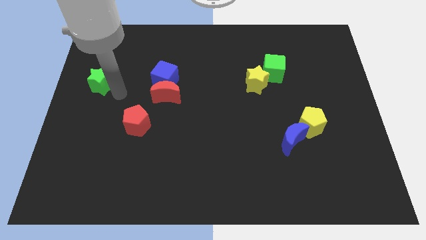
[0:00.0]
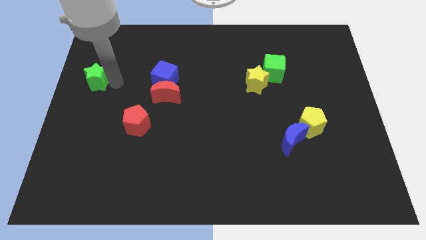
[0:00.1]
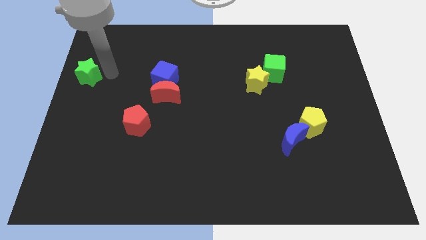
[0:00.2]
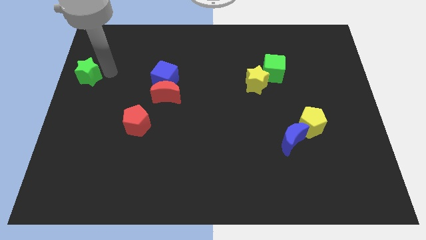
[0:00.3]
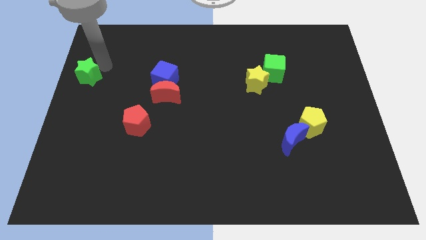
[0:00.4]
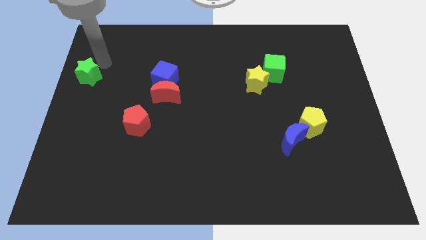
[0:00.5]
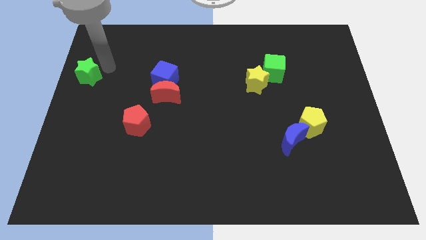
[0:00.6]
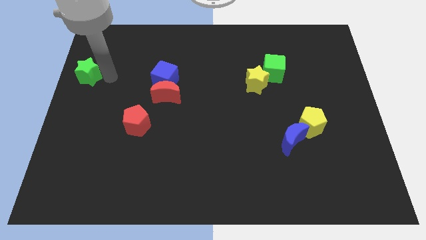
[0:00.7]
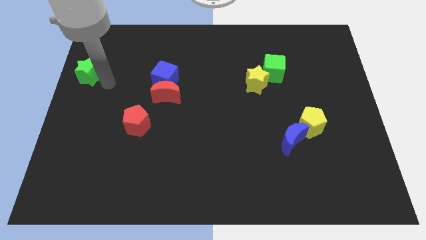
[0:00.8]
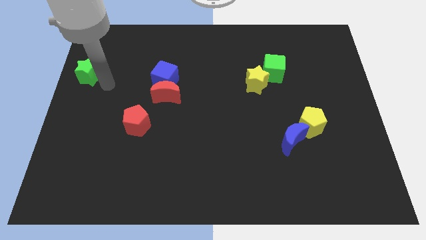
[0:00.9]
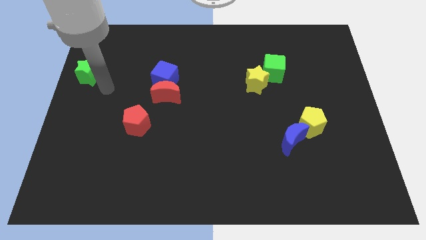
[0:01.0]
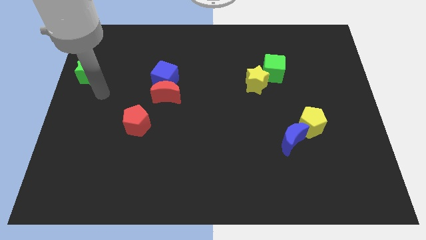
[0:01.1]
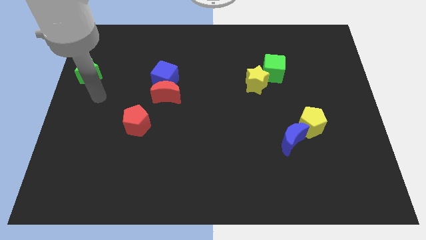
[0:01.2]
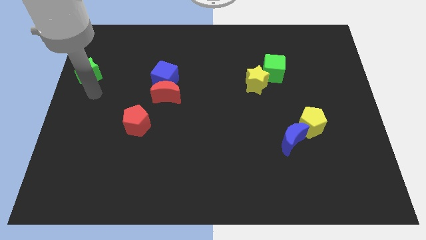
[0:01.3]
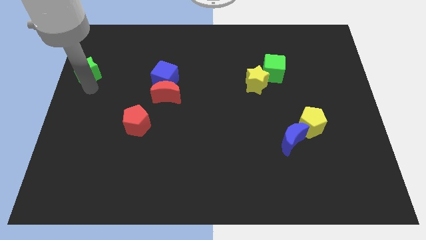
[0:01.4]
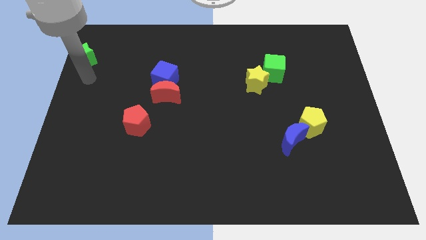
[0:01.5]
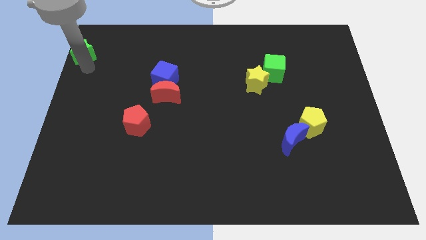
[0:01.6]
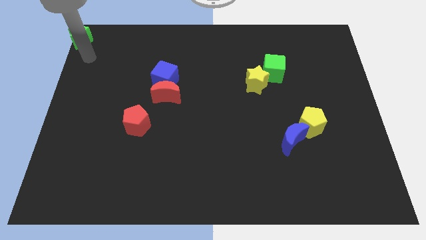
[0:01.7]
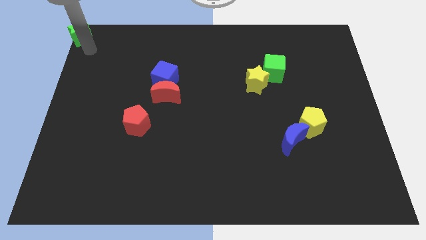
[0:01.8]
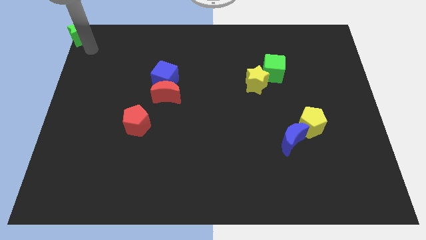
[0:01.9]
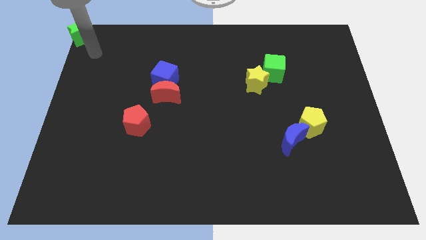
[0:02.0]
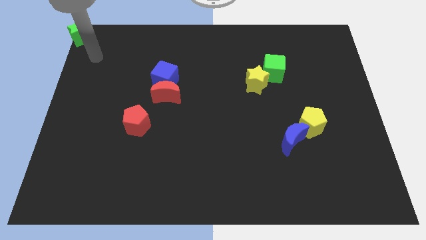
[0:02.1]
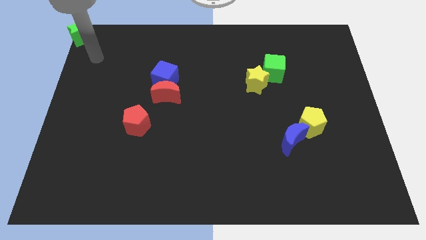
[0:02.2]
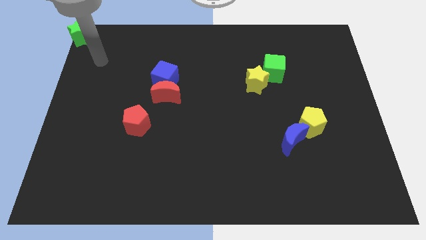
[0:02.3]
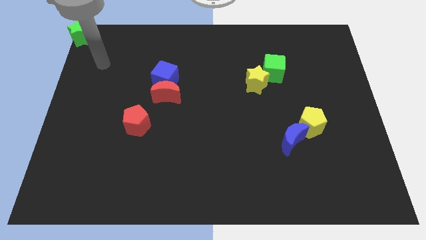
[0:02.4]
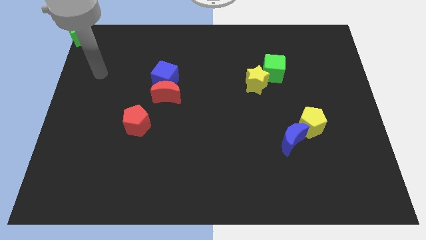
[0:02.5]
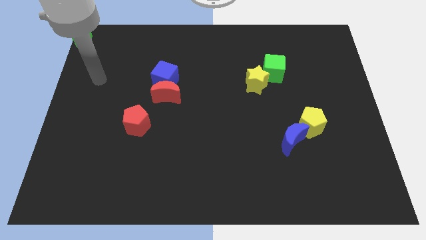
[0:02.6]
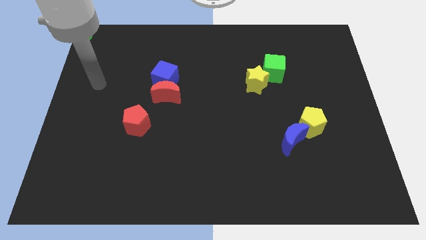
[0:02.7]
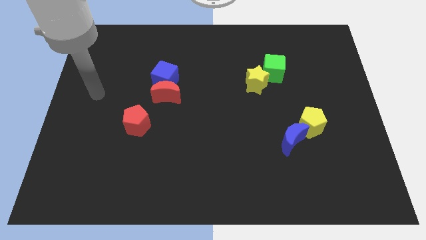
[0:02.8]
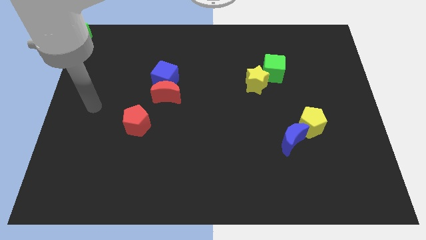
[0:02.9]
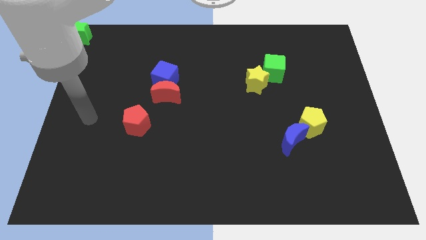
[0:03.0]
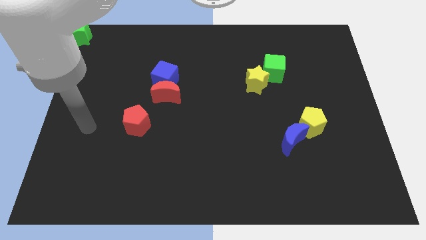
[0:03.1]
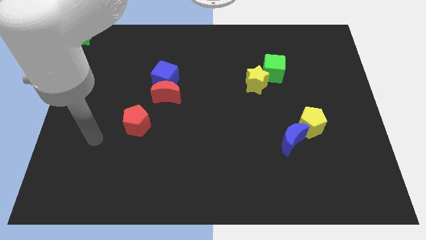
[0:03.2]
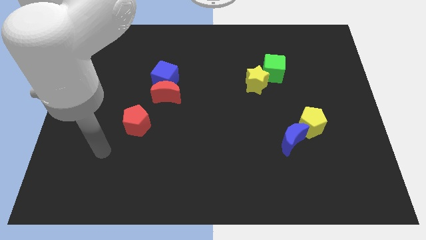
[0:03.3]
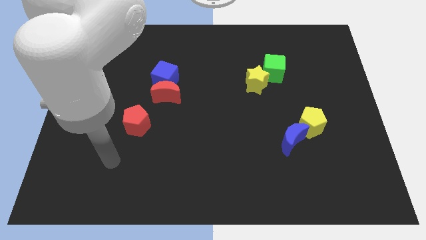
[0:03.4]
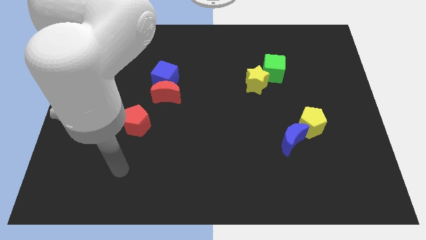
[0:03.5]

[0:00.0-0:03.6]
place the green star to the top left corner

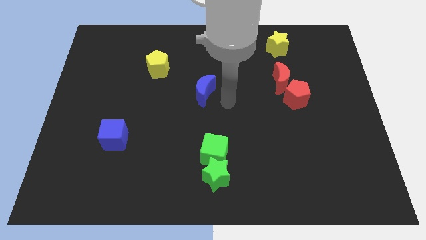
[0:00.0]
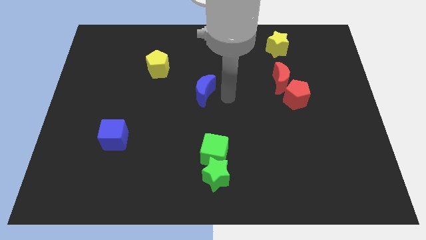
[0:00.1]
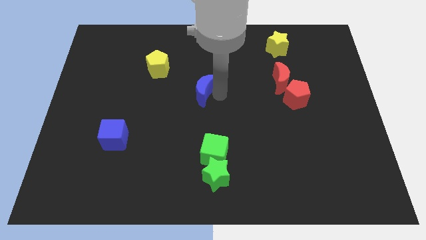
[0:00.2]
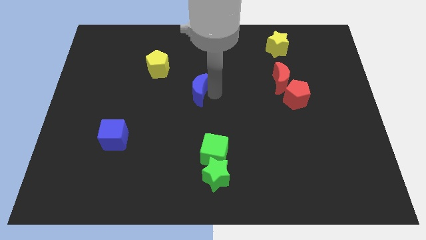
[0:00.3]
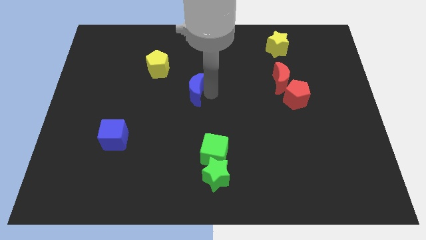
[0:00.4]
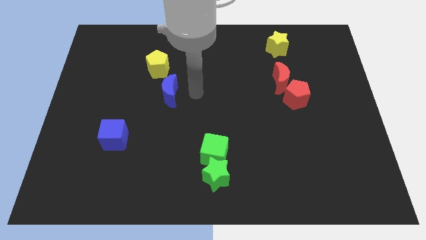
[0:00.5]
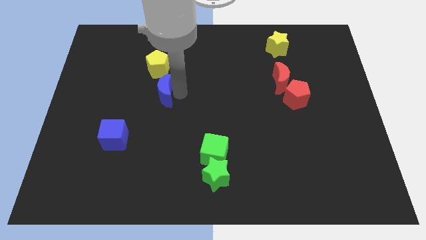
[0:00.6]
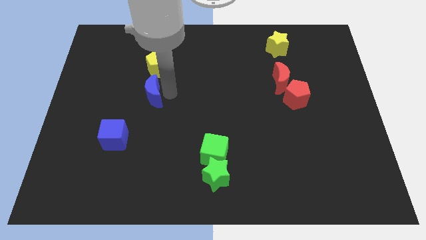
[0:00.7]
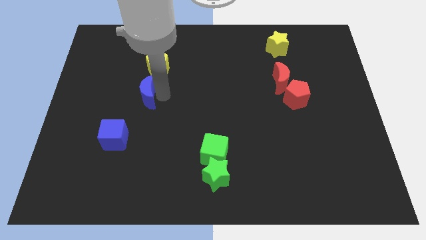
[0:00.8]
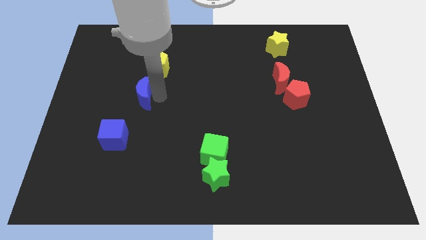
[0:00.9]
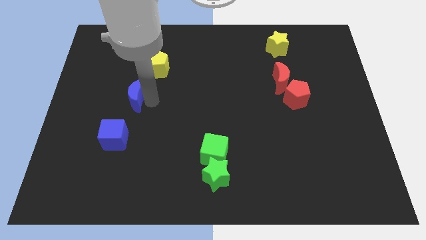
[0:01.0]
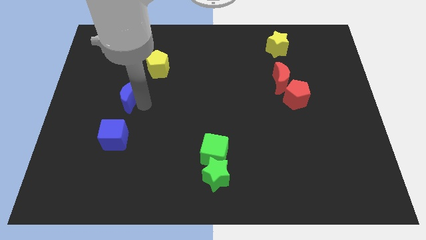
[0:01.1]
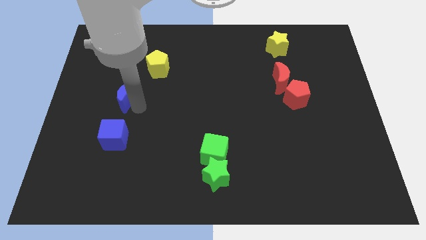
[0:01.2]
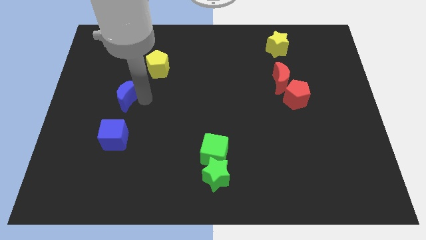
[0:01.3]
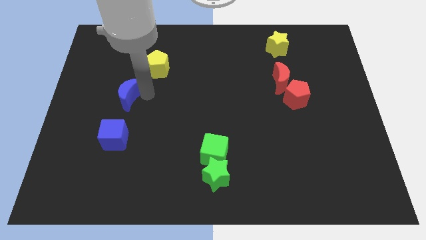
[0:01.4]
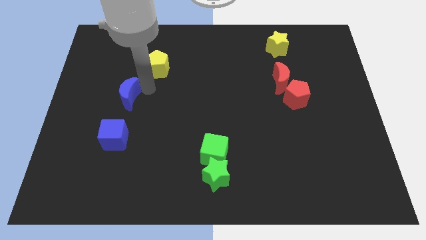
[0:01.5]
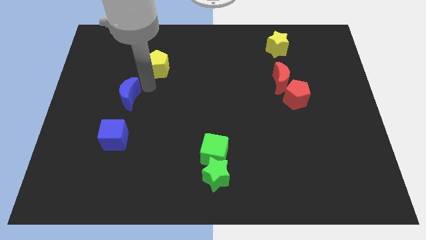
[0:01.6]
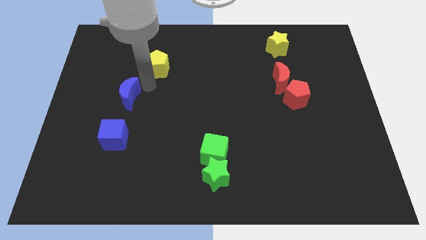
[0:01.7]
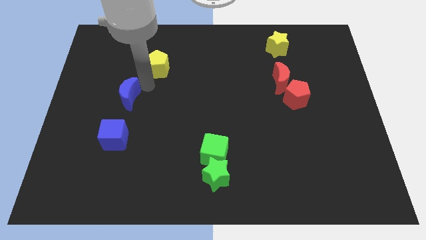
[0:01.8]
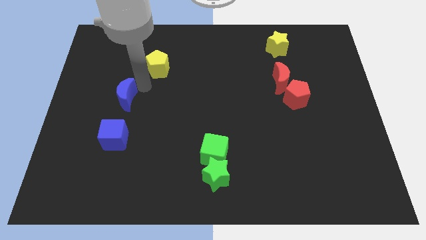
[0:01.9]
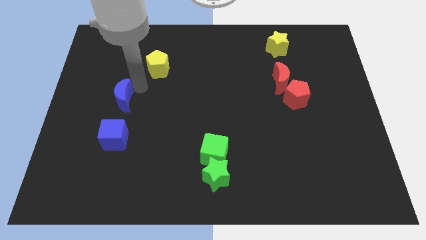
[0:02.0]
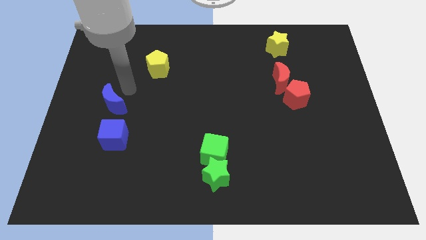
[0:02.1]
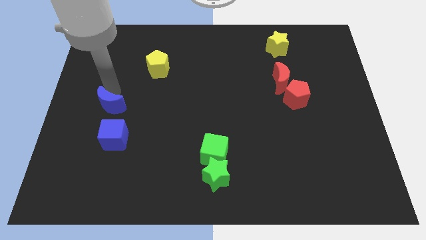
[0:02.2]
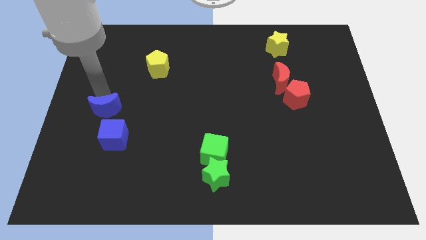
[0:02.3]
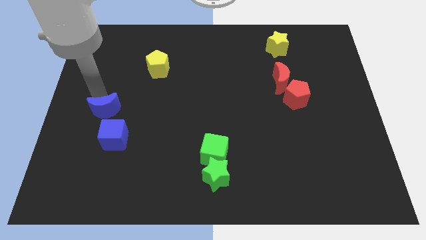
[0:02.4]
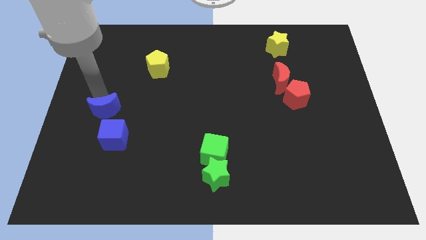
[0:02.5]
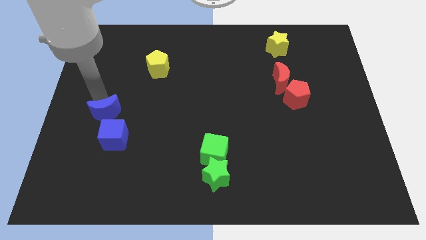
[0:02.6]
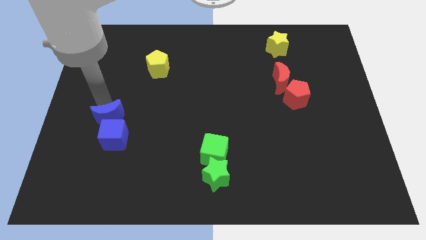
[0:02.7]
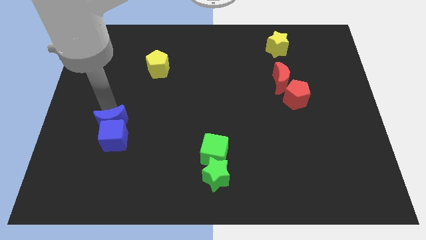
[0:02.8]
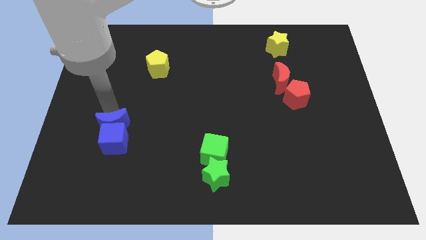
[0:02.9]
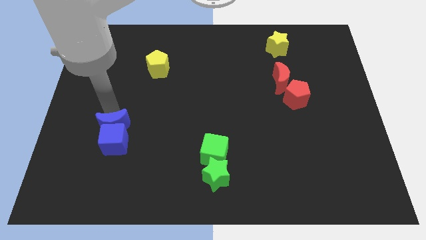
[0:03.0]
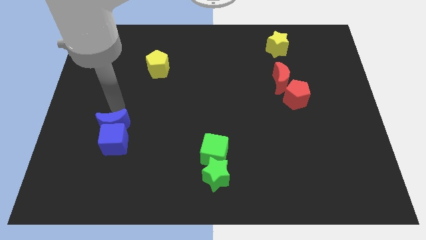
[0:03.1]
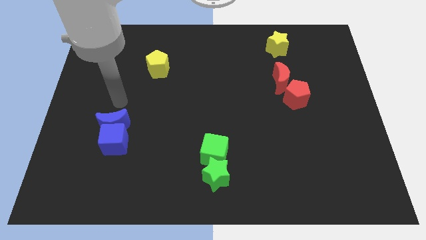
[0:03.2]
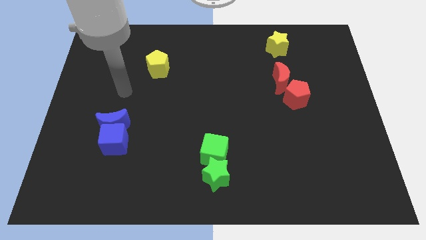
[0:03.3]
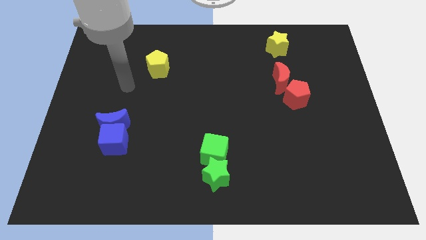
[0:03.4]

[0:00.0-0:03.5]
push the blue moon into the blue cube

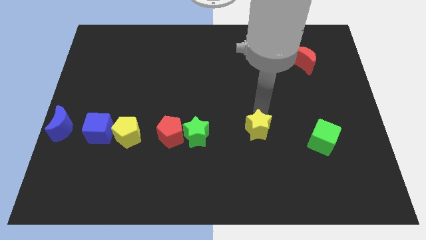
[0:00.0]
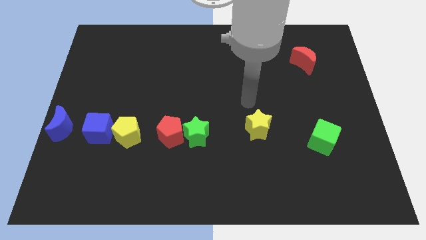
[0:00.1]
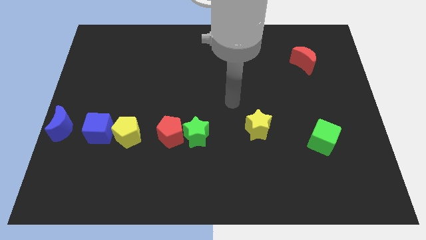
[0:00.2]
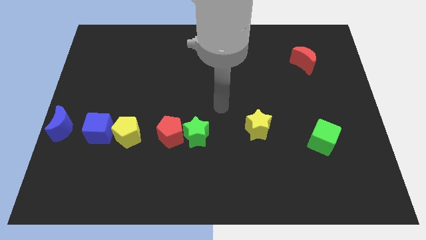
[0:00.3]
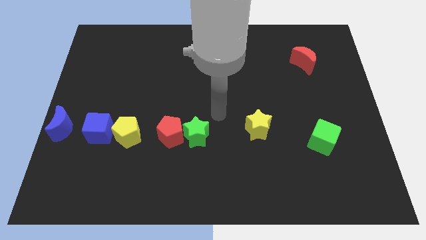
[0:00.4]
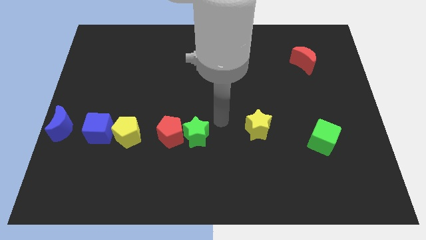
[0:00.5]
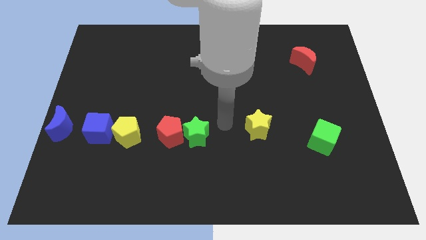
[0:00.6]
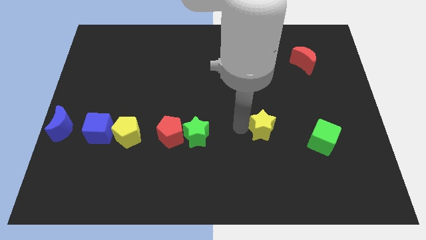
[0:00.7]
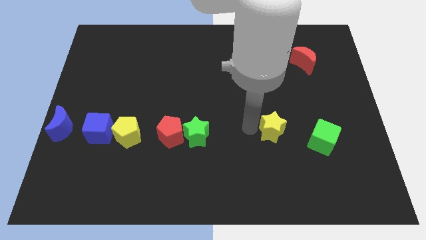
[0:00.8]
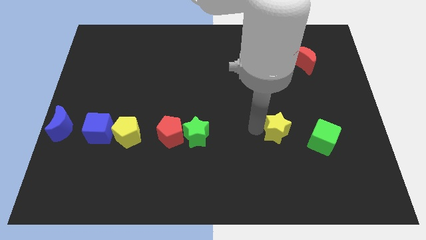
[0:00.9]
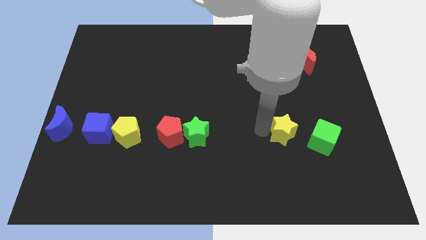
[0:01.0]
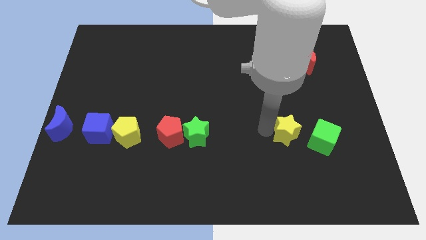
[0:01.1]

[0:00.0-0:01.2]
move the yellow star to the left side of the green cube

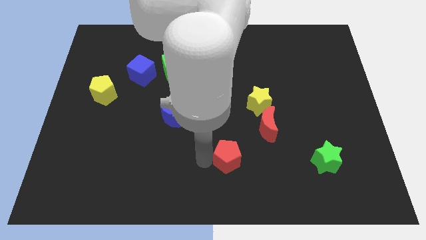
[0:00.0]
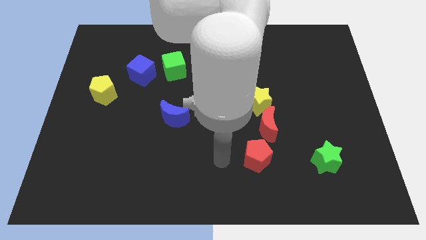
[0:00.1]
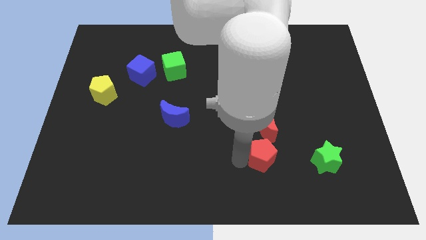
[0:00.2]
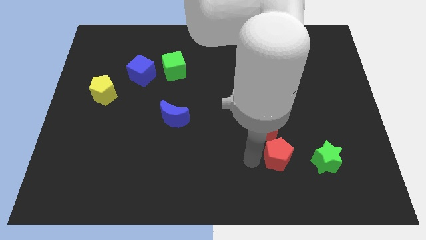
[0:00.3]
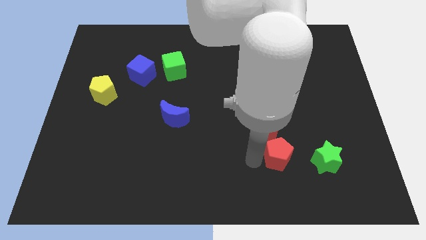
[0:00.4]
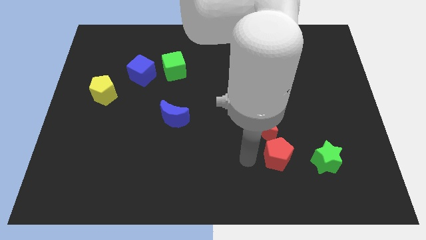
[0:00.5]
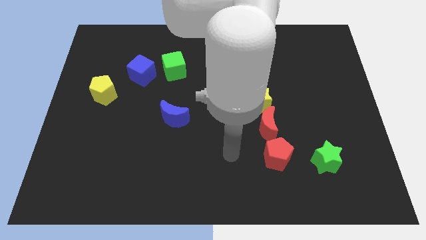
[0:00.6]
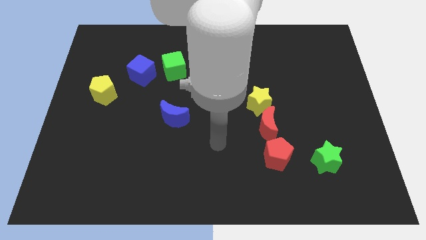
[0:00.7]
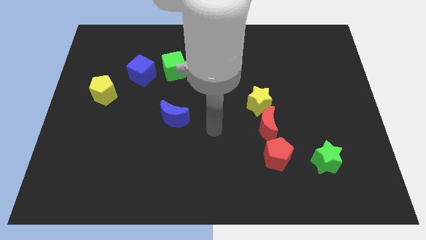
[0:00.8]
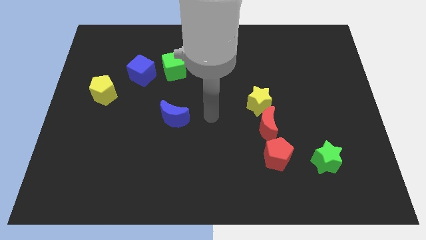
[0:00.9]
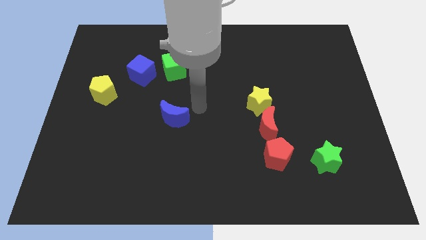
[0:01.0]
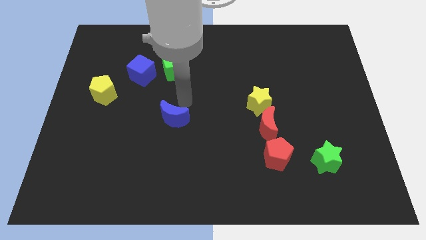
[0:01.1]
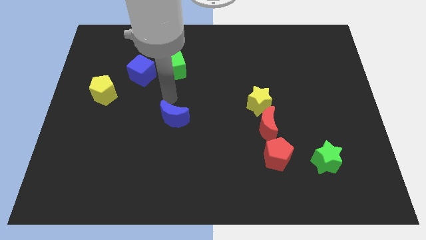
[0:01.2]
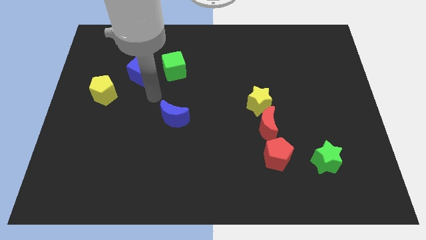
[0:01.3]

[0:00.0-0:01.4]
push the red pentagon below the red moon
